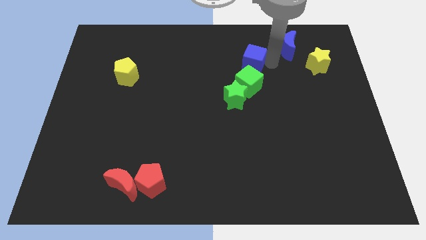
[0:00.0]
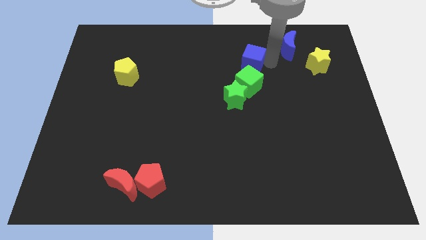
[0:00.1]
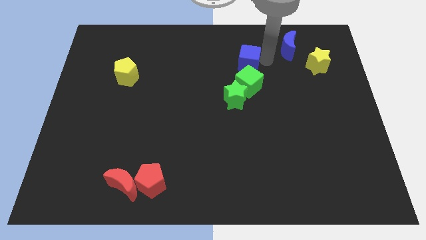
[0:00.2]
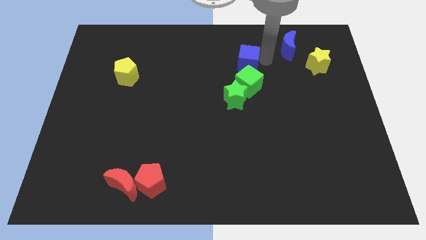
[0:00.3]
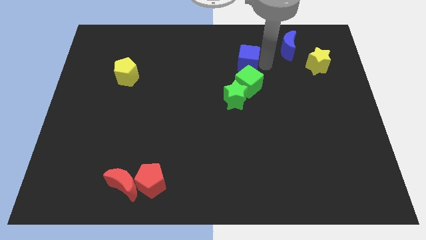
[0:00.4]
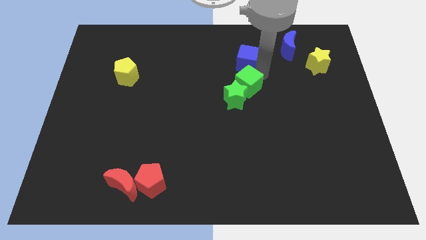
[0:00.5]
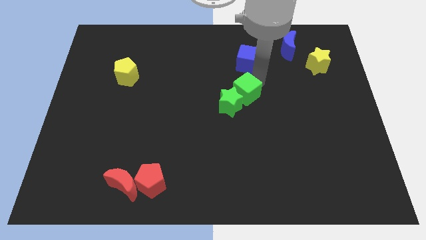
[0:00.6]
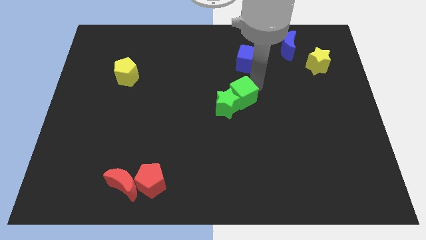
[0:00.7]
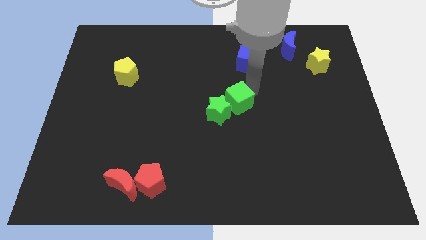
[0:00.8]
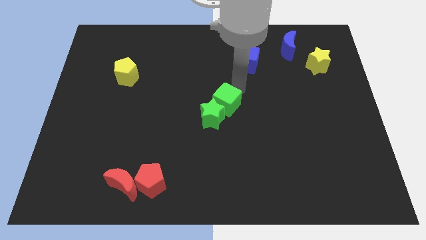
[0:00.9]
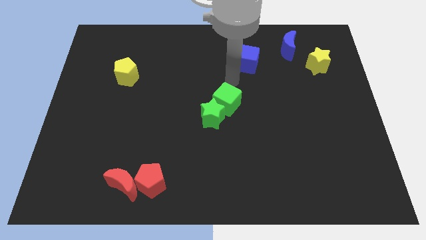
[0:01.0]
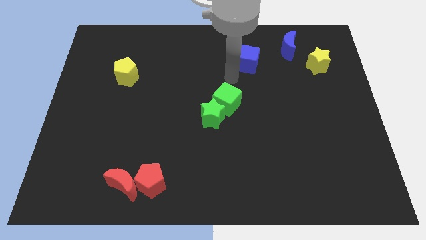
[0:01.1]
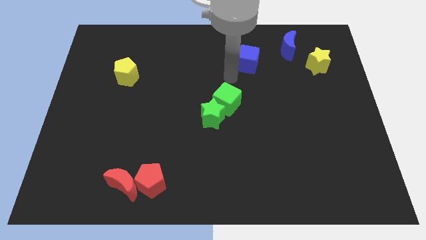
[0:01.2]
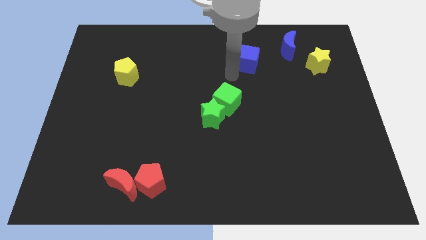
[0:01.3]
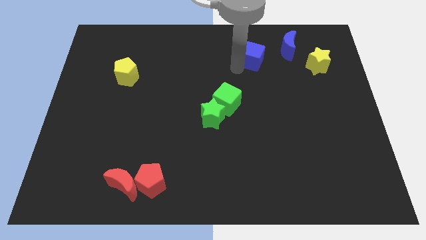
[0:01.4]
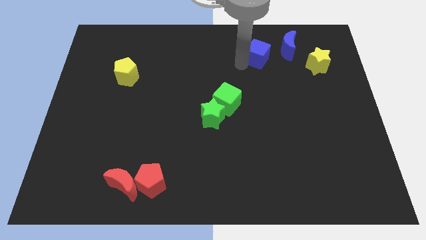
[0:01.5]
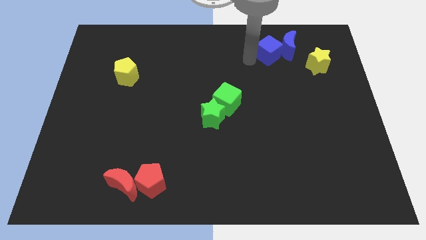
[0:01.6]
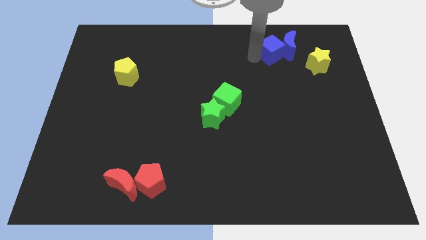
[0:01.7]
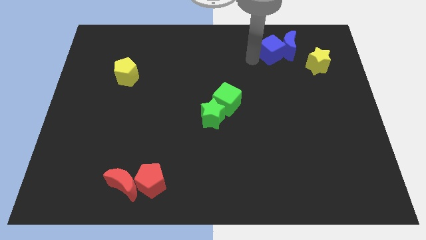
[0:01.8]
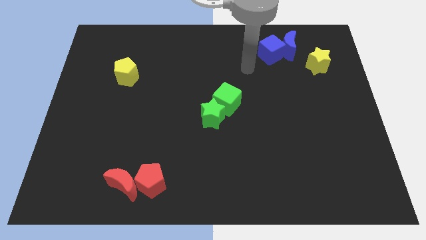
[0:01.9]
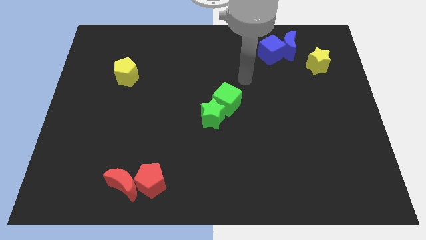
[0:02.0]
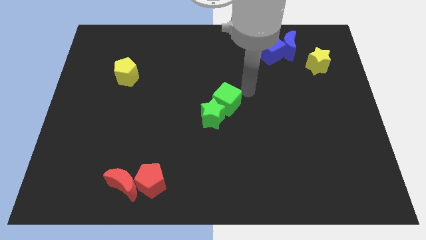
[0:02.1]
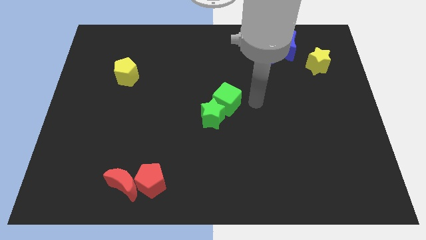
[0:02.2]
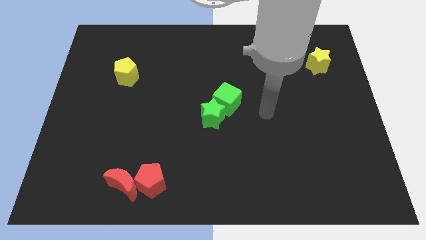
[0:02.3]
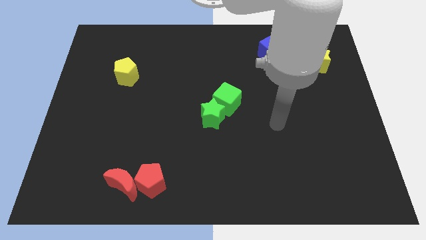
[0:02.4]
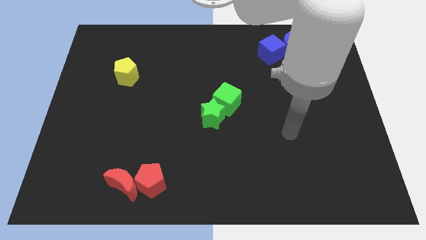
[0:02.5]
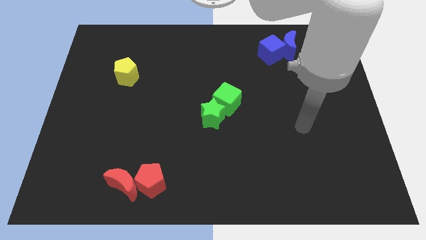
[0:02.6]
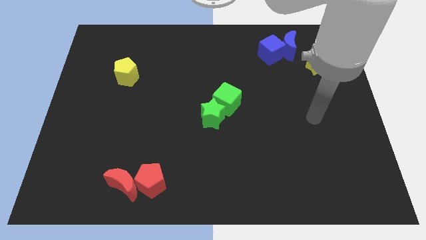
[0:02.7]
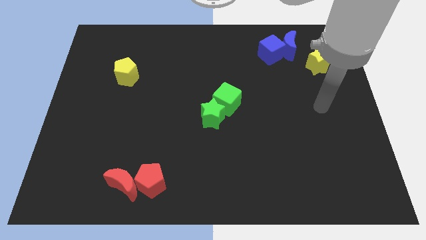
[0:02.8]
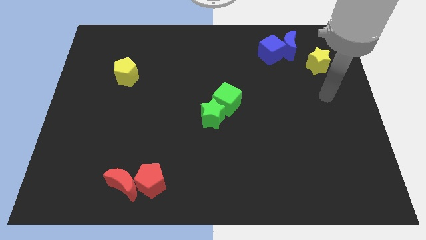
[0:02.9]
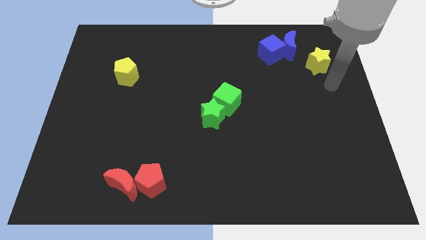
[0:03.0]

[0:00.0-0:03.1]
push green cube and green star to the center of the board

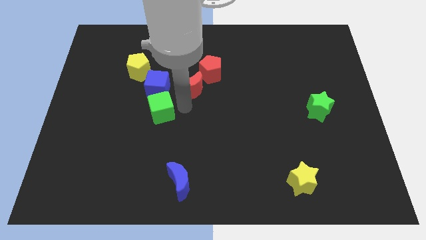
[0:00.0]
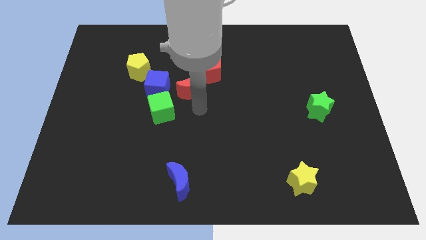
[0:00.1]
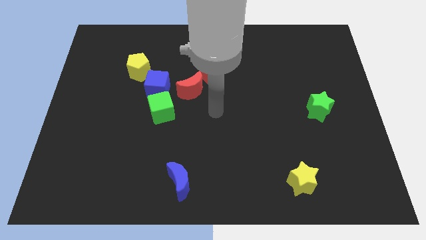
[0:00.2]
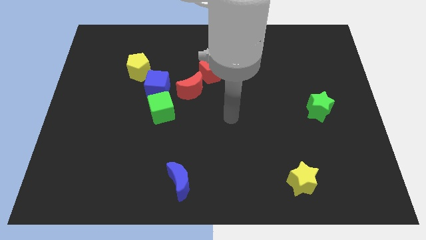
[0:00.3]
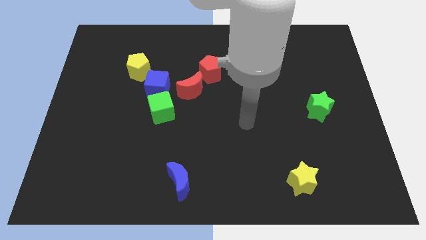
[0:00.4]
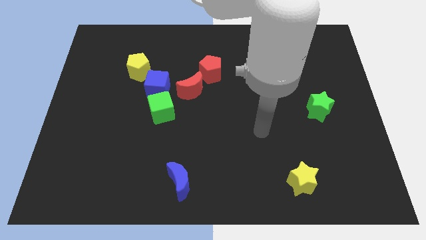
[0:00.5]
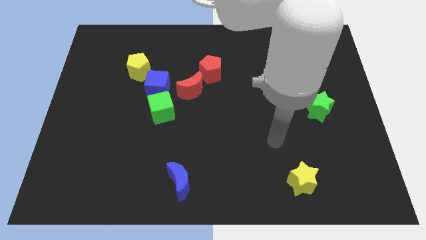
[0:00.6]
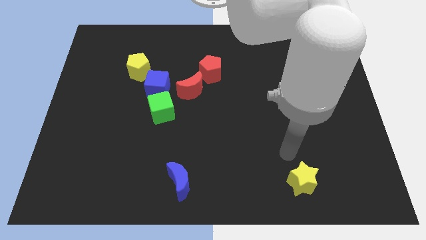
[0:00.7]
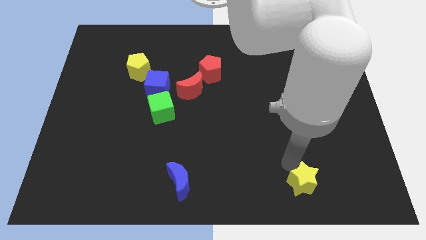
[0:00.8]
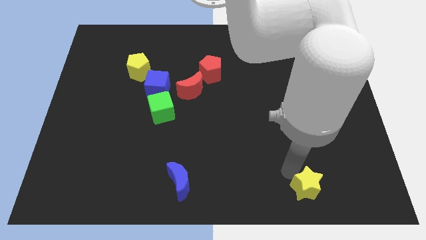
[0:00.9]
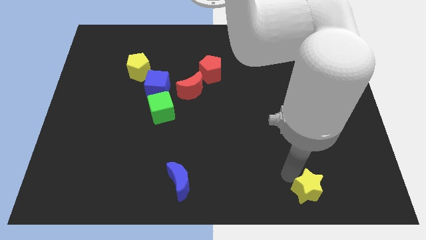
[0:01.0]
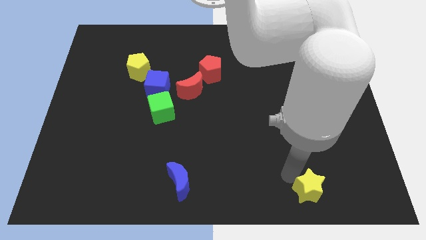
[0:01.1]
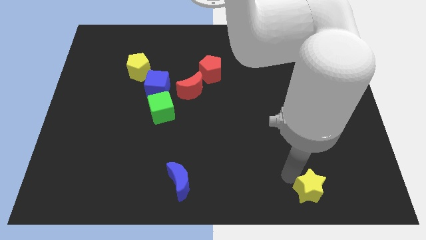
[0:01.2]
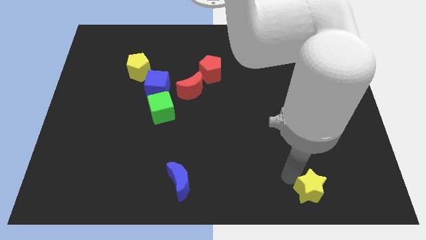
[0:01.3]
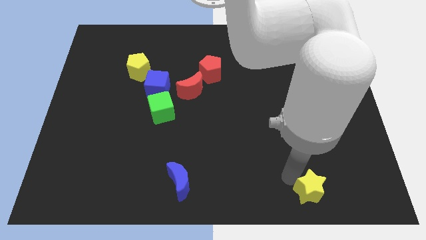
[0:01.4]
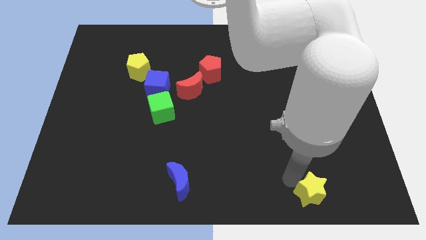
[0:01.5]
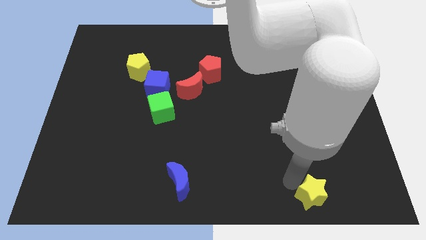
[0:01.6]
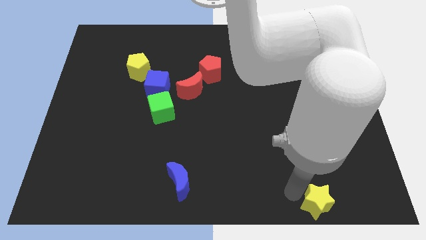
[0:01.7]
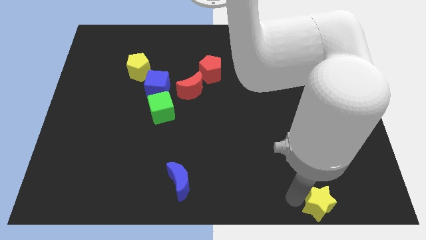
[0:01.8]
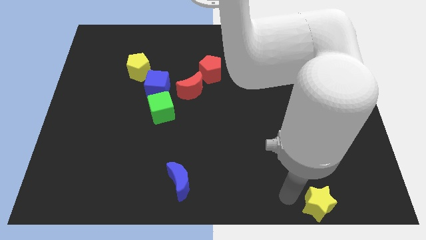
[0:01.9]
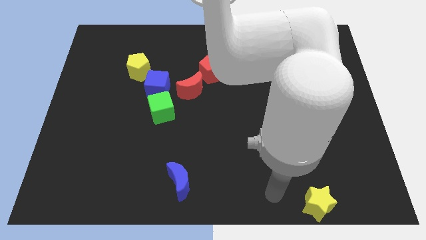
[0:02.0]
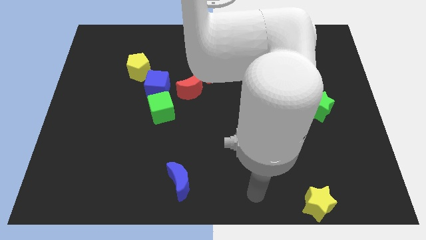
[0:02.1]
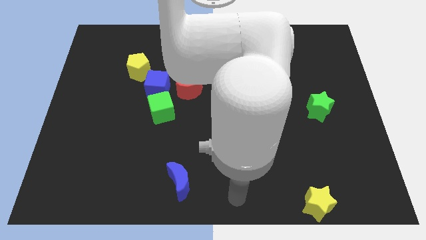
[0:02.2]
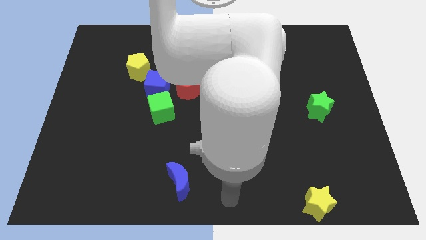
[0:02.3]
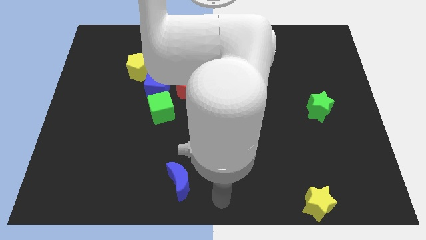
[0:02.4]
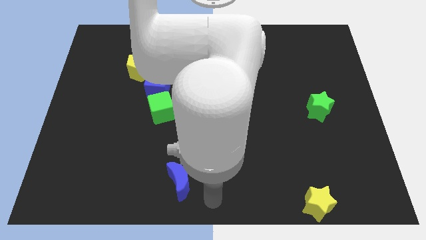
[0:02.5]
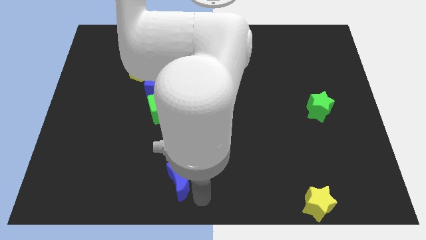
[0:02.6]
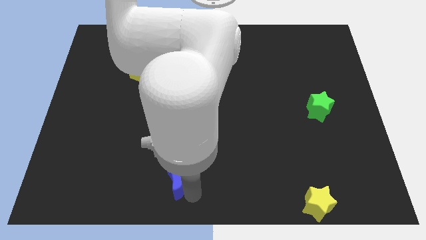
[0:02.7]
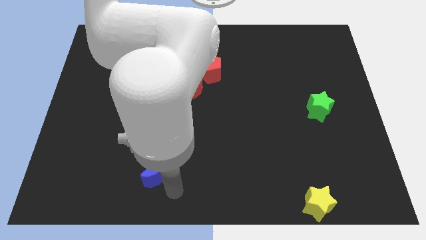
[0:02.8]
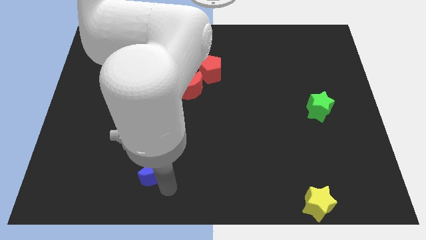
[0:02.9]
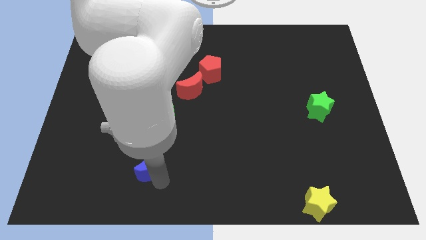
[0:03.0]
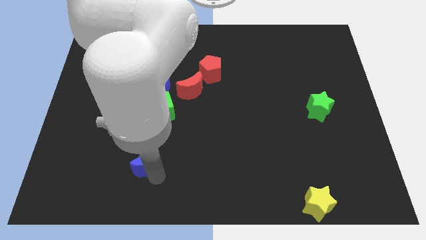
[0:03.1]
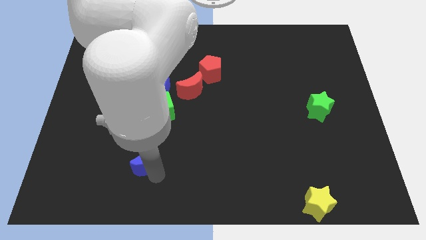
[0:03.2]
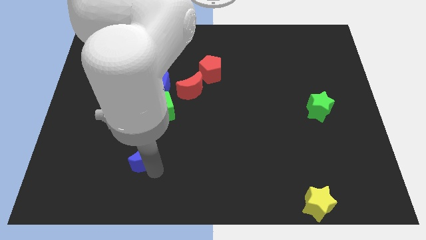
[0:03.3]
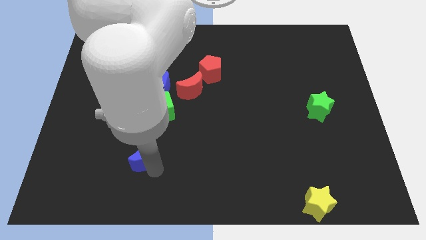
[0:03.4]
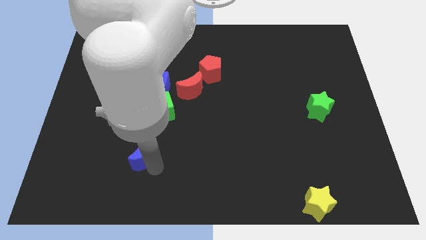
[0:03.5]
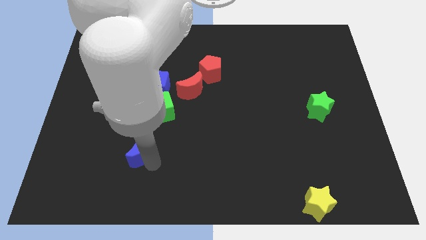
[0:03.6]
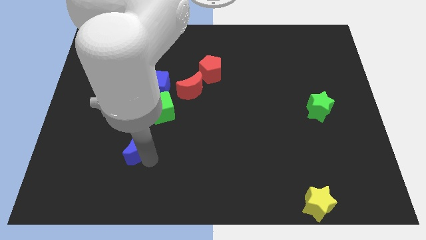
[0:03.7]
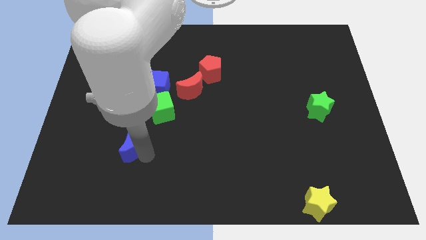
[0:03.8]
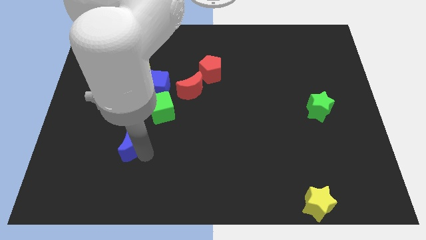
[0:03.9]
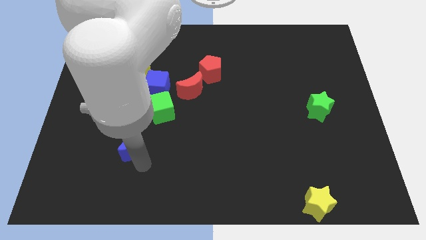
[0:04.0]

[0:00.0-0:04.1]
move the blue moon vertical to the yellow pentagon

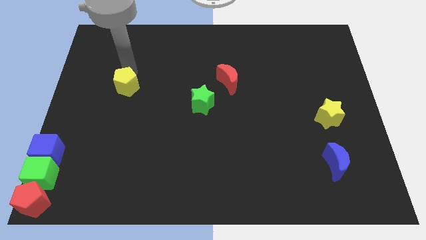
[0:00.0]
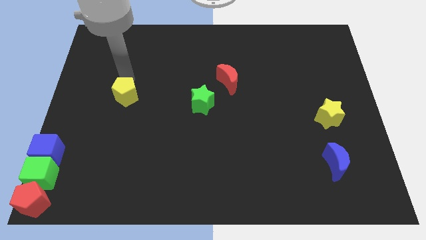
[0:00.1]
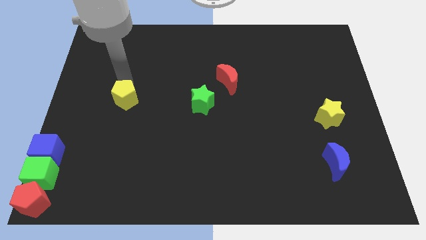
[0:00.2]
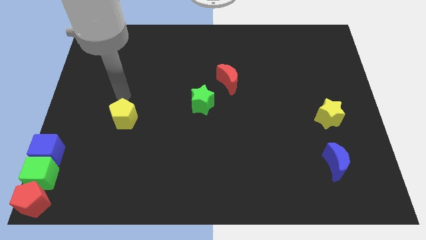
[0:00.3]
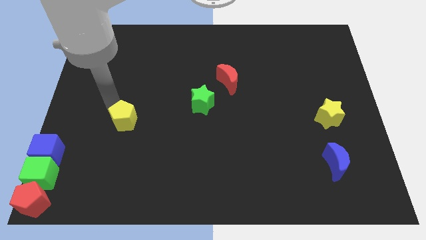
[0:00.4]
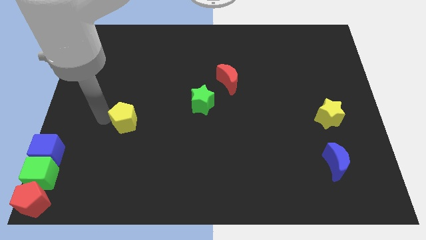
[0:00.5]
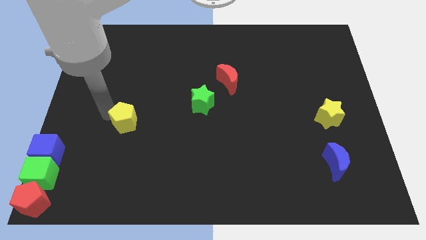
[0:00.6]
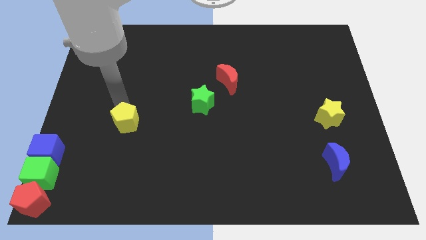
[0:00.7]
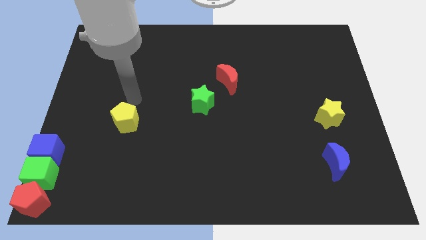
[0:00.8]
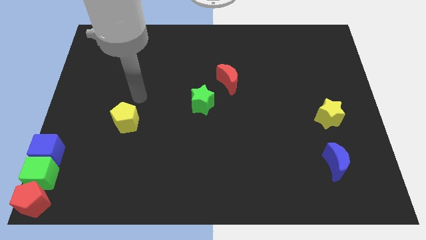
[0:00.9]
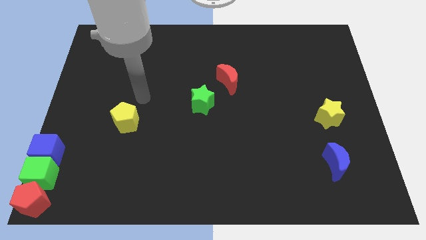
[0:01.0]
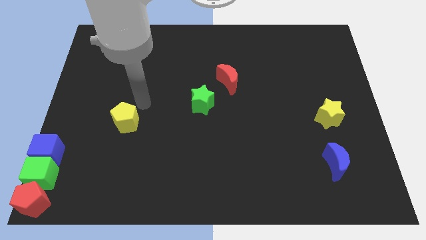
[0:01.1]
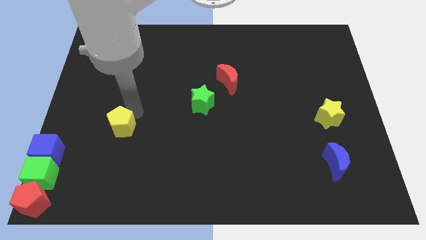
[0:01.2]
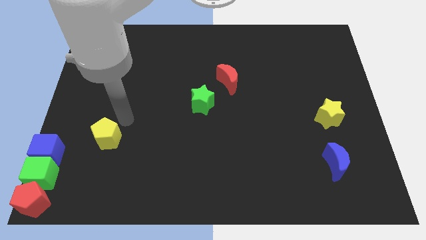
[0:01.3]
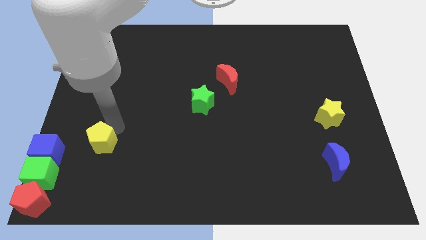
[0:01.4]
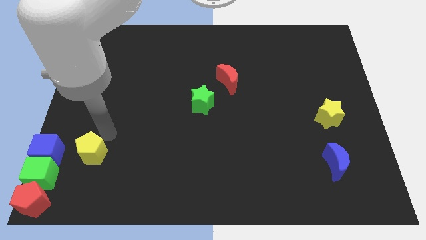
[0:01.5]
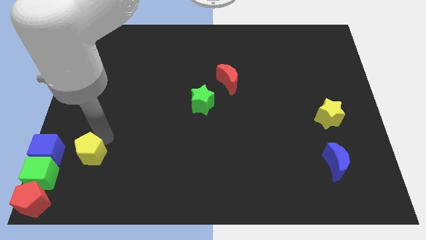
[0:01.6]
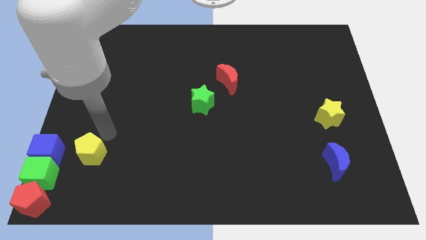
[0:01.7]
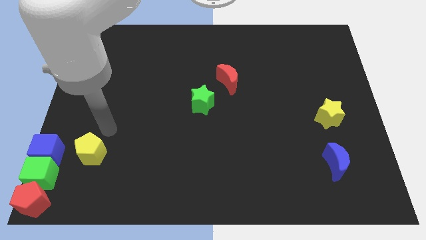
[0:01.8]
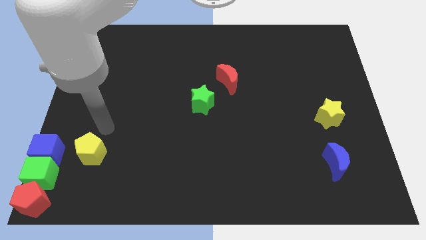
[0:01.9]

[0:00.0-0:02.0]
place the yellow pentagon to the right of the blue cube
